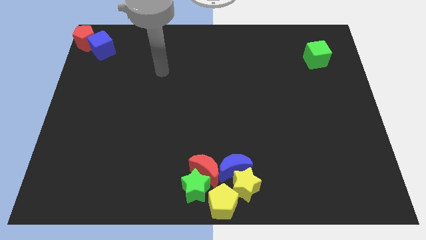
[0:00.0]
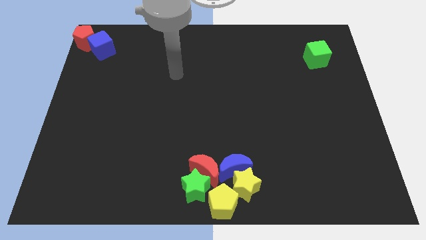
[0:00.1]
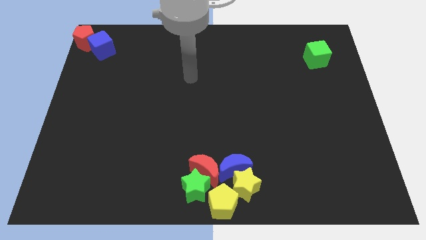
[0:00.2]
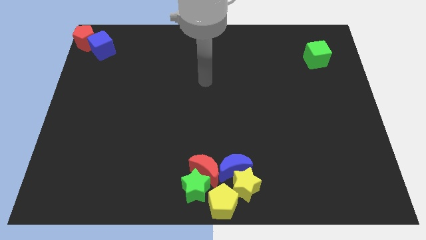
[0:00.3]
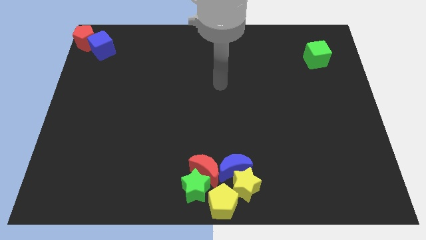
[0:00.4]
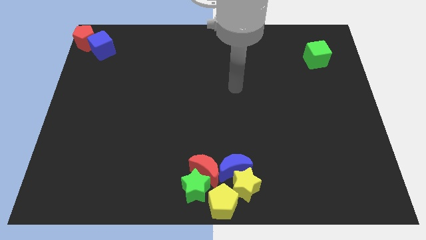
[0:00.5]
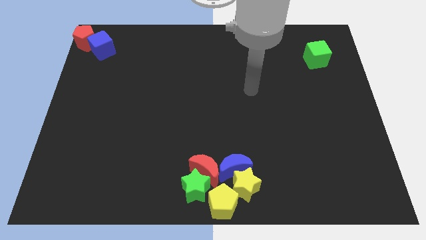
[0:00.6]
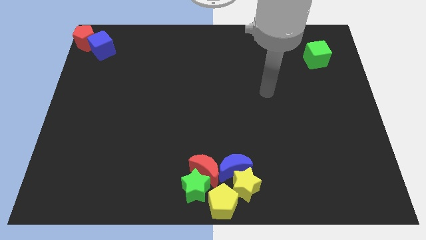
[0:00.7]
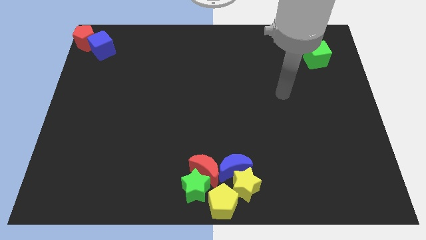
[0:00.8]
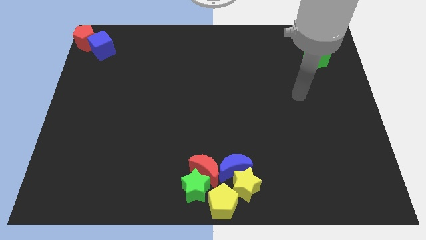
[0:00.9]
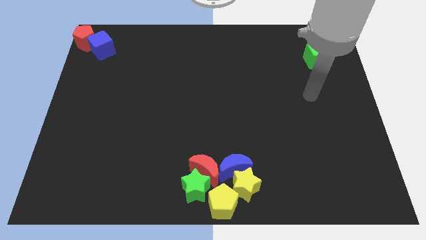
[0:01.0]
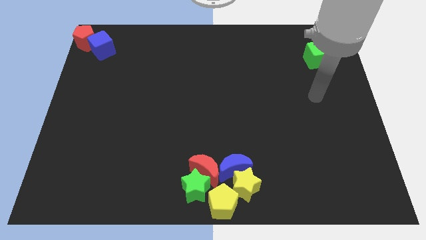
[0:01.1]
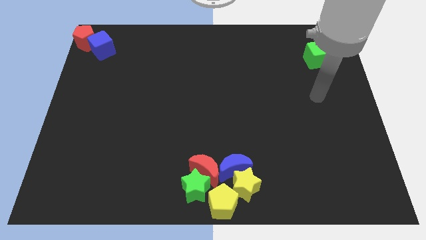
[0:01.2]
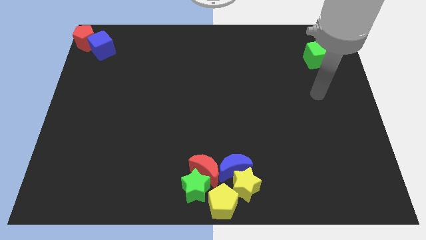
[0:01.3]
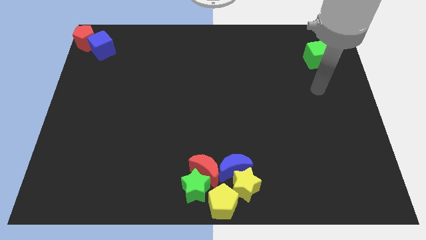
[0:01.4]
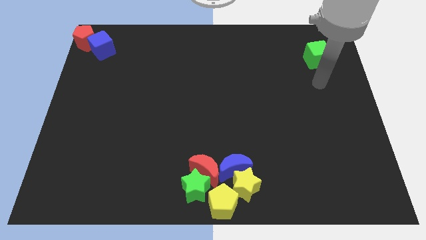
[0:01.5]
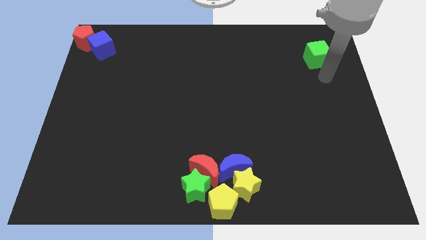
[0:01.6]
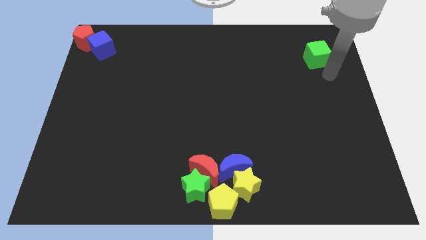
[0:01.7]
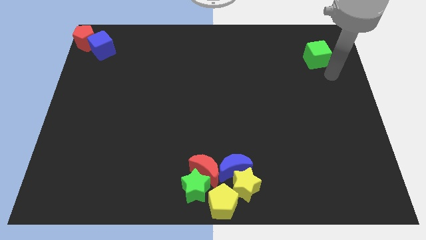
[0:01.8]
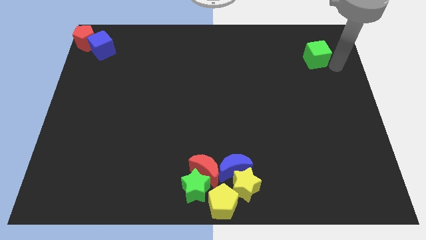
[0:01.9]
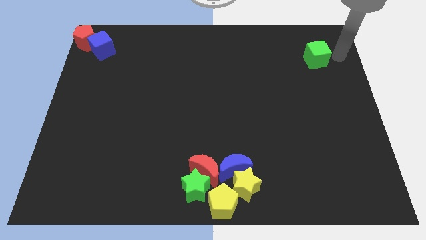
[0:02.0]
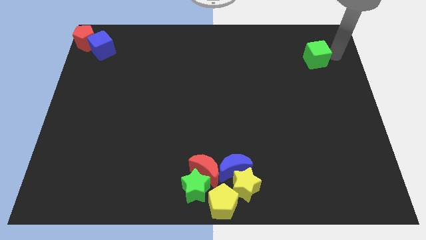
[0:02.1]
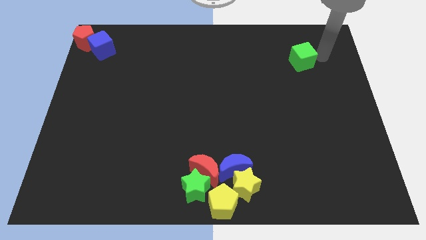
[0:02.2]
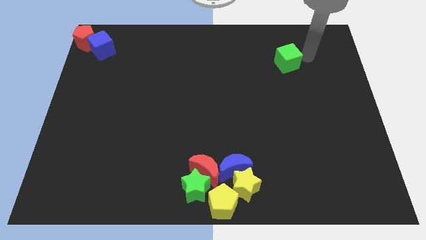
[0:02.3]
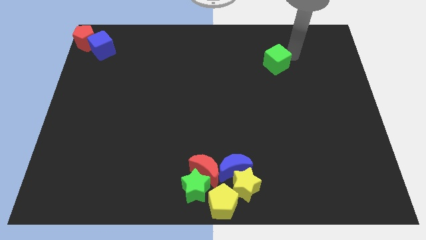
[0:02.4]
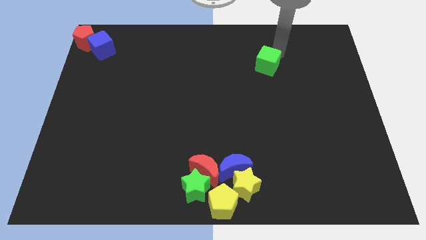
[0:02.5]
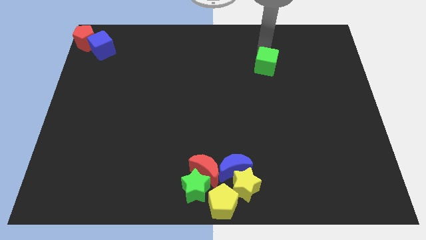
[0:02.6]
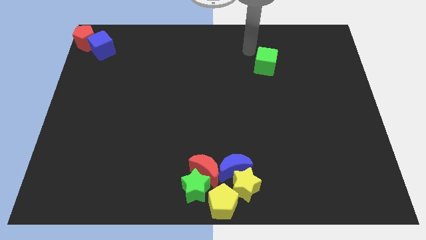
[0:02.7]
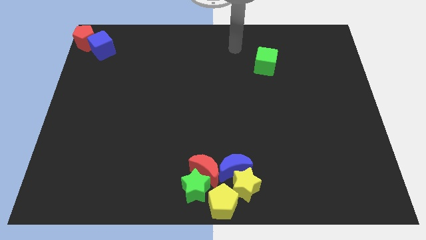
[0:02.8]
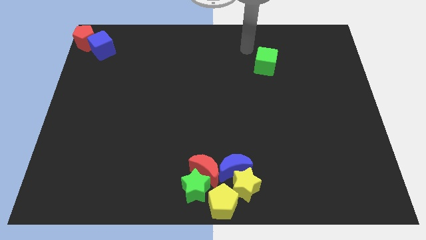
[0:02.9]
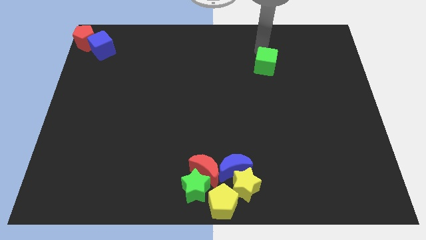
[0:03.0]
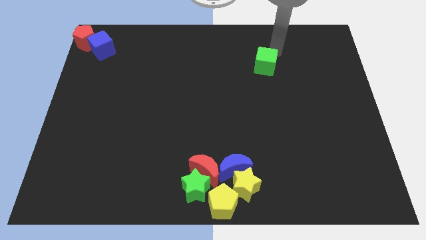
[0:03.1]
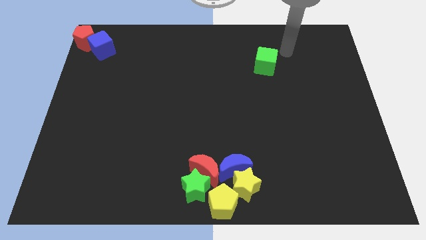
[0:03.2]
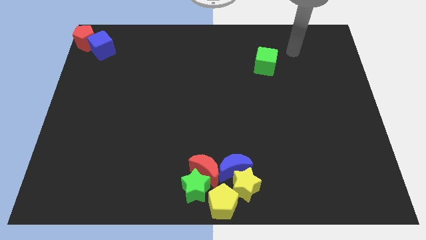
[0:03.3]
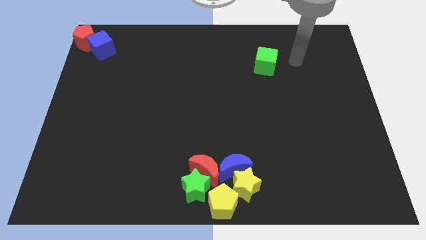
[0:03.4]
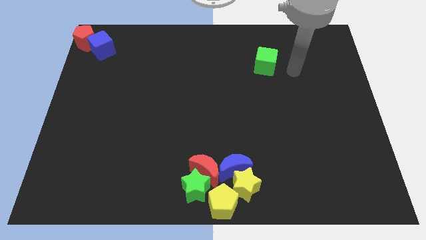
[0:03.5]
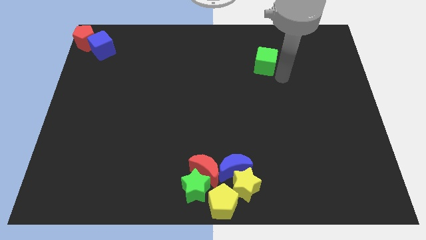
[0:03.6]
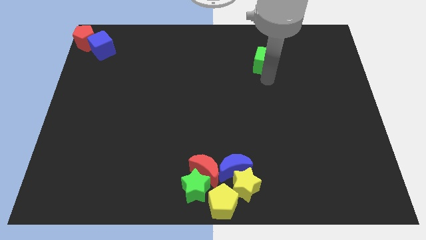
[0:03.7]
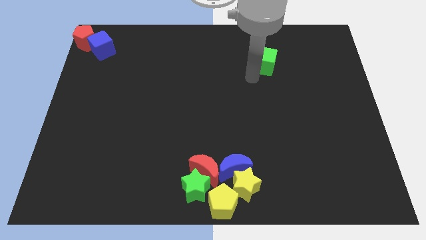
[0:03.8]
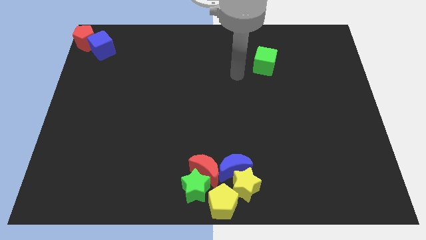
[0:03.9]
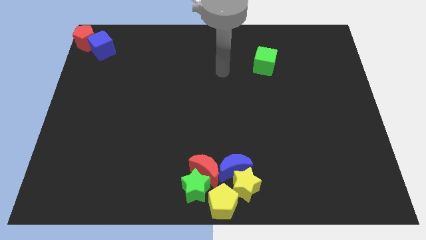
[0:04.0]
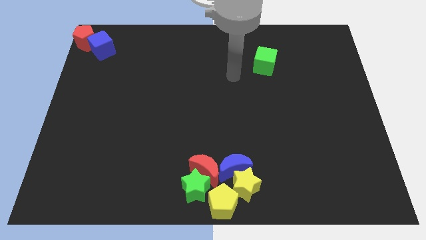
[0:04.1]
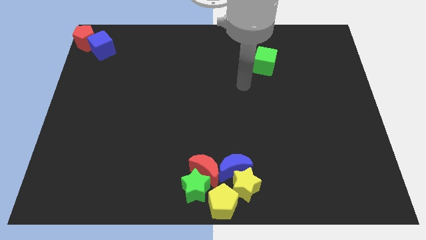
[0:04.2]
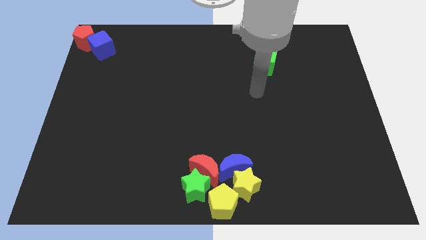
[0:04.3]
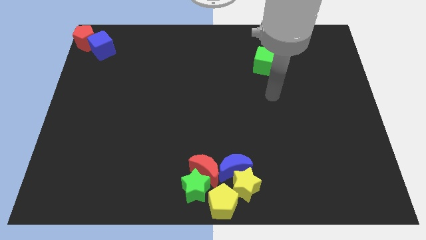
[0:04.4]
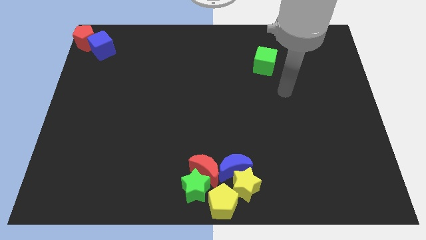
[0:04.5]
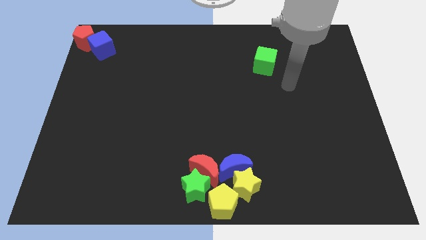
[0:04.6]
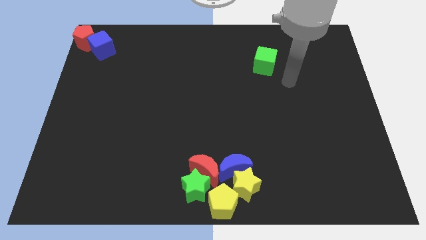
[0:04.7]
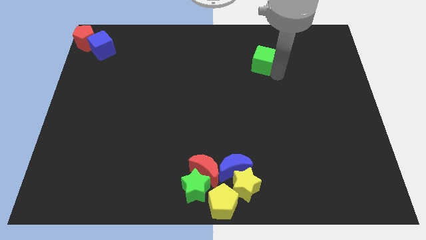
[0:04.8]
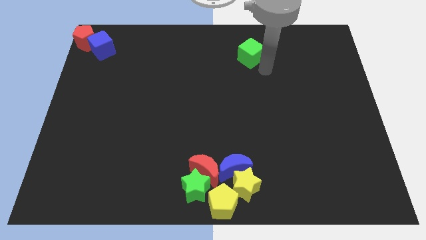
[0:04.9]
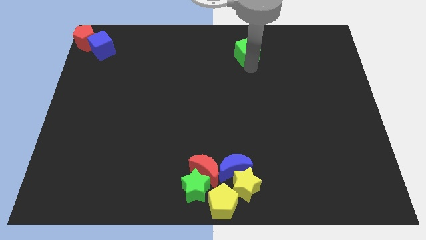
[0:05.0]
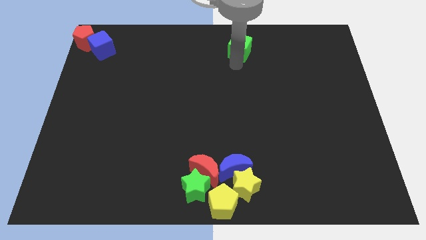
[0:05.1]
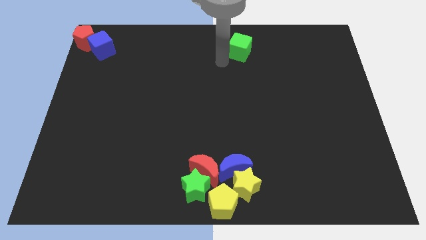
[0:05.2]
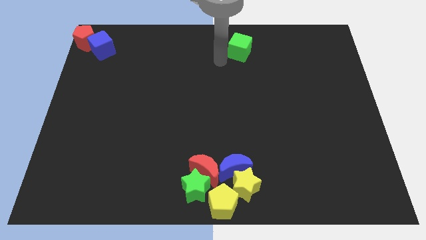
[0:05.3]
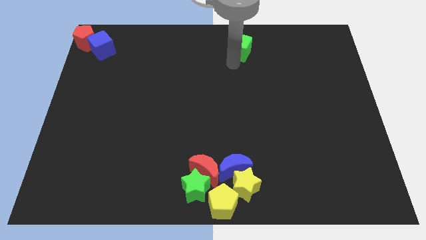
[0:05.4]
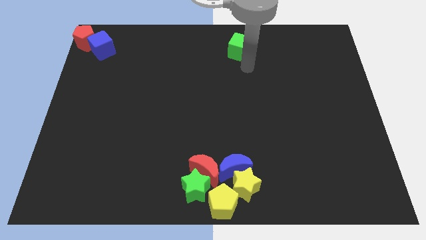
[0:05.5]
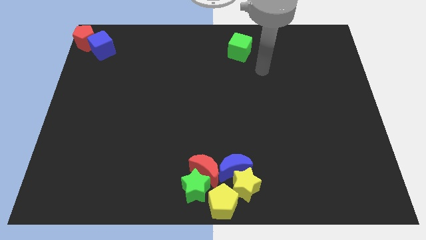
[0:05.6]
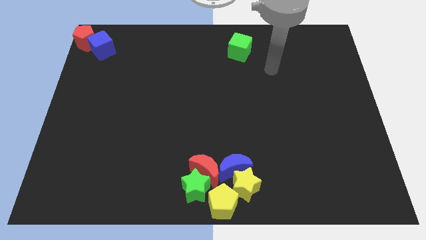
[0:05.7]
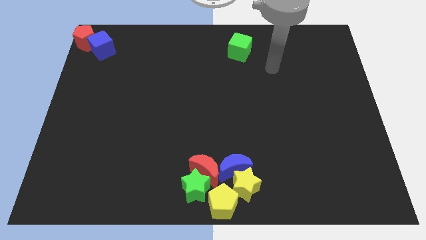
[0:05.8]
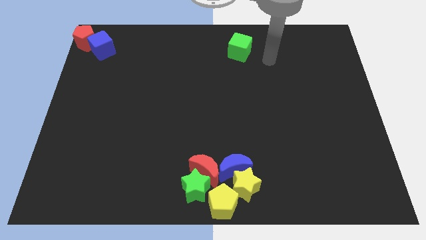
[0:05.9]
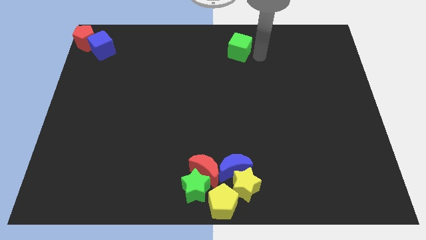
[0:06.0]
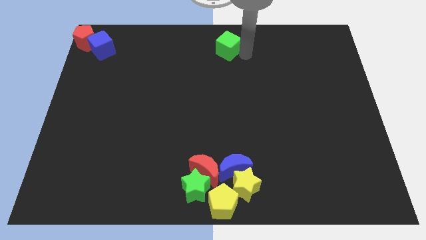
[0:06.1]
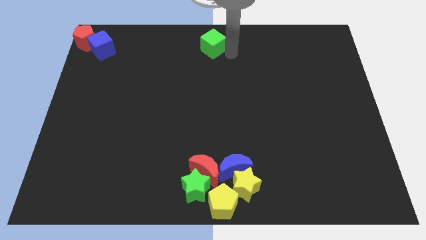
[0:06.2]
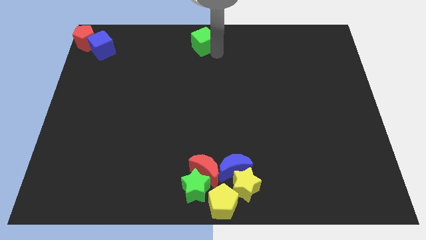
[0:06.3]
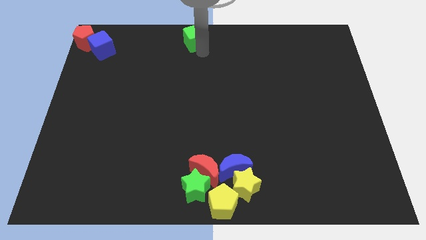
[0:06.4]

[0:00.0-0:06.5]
push the green cube towards top left corner

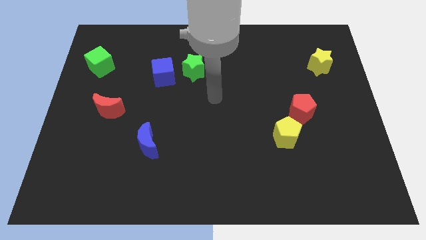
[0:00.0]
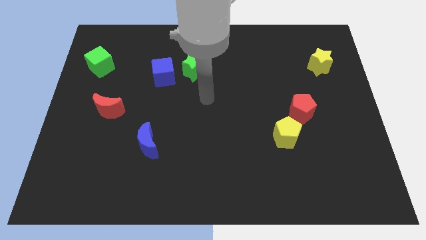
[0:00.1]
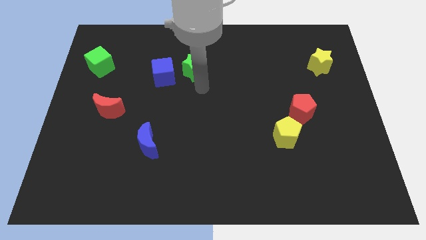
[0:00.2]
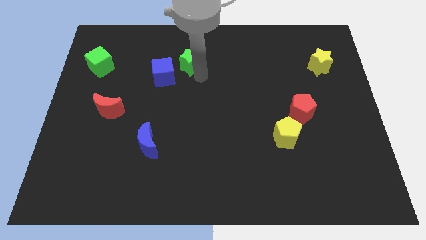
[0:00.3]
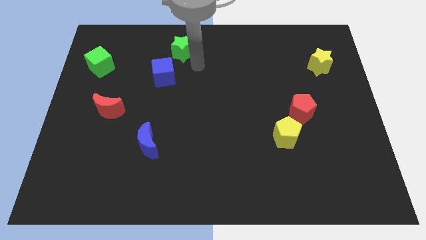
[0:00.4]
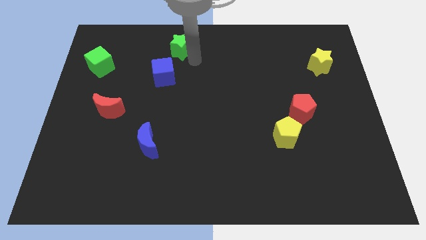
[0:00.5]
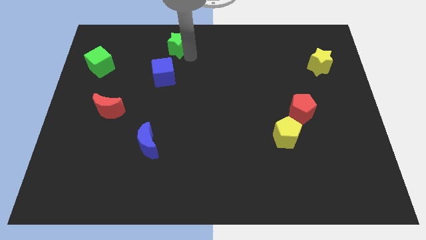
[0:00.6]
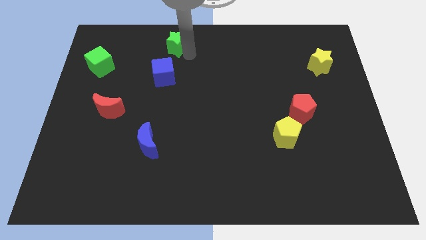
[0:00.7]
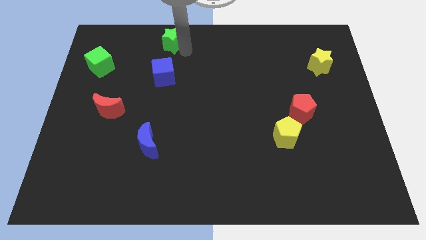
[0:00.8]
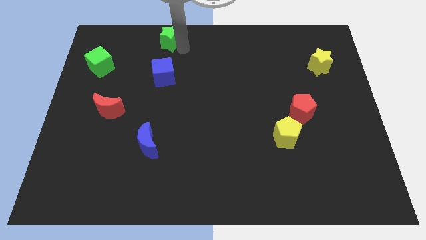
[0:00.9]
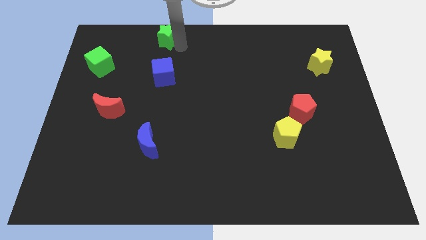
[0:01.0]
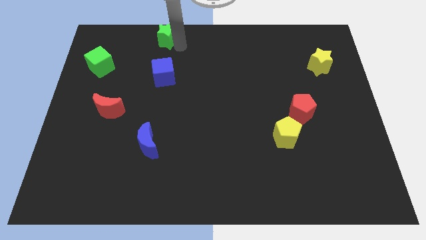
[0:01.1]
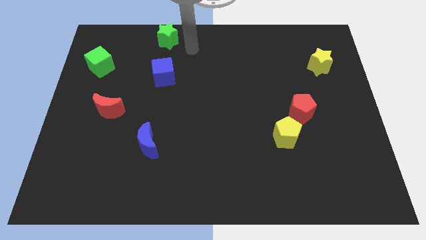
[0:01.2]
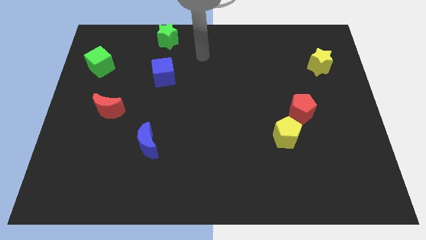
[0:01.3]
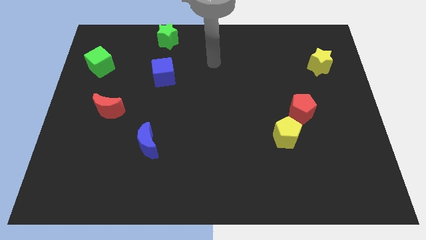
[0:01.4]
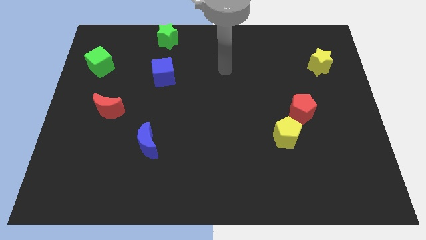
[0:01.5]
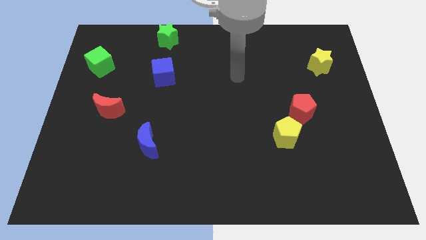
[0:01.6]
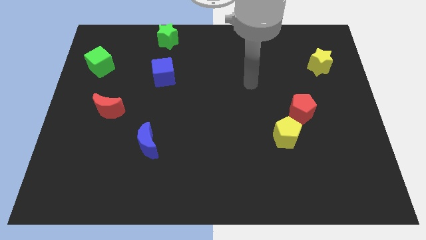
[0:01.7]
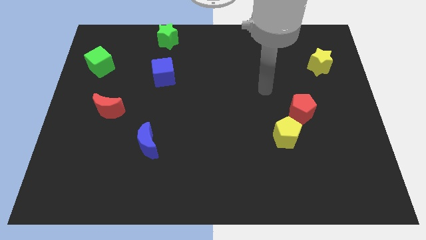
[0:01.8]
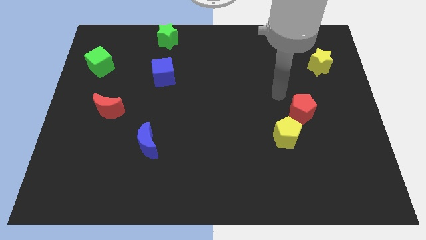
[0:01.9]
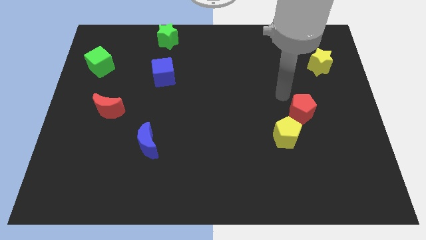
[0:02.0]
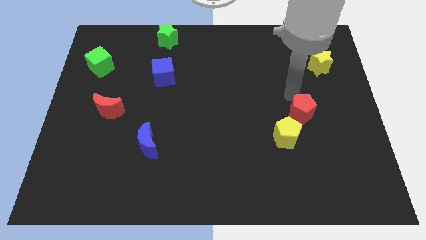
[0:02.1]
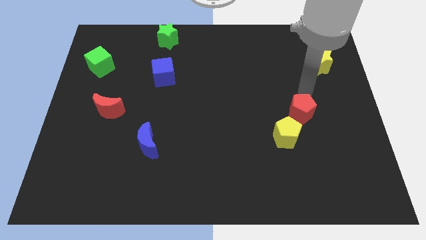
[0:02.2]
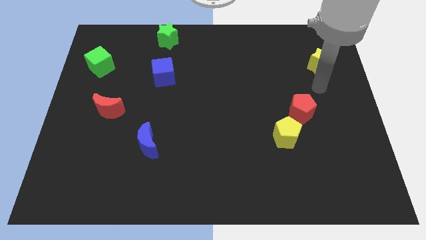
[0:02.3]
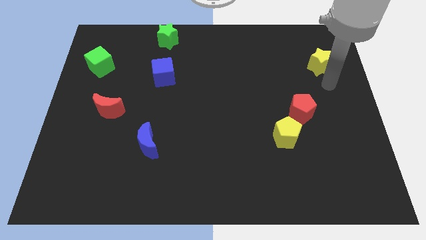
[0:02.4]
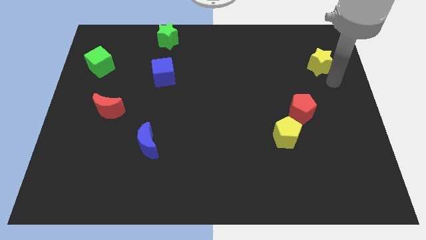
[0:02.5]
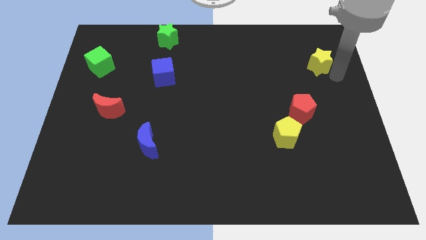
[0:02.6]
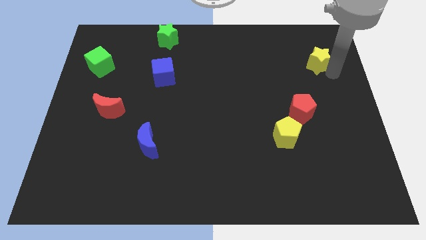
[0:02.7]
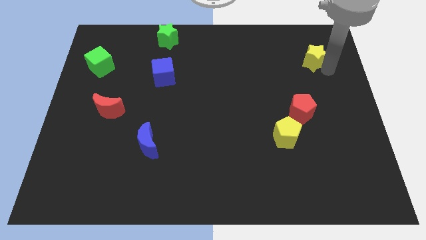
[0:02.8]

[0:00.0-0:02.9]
move the green star towards the top center and yellow star towards top
